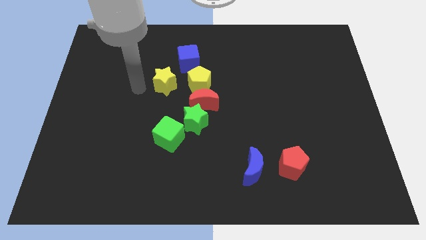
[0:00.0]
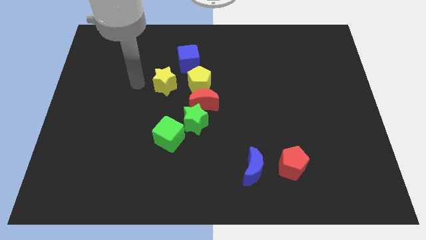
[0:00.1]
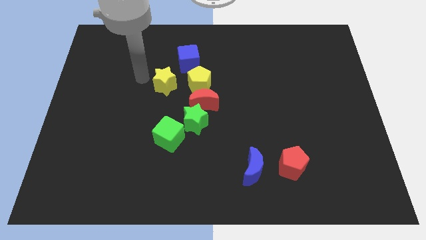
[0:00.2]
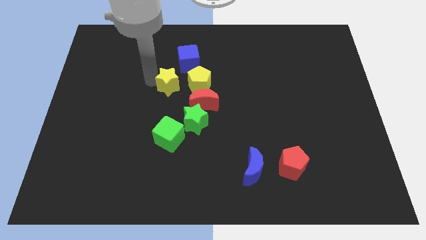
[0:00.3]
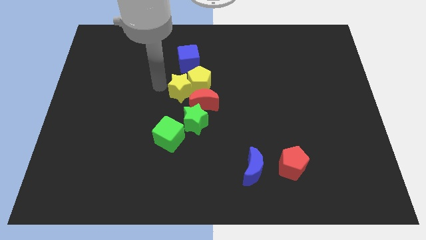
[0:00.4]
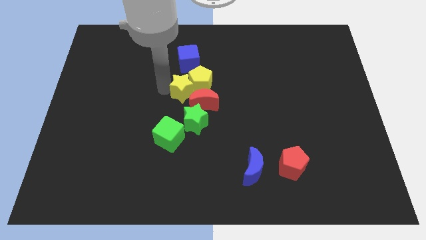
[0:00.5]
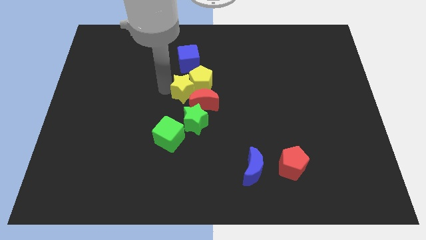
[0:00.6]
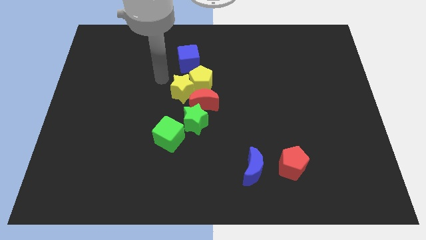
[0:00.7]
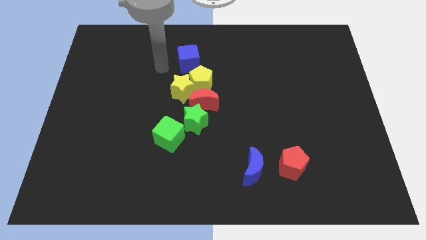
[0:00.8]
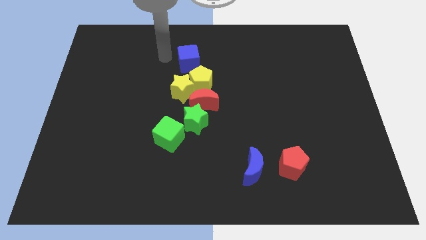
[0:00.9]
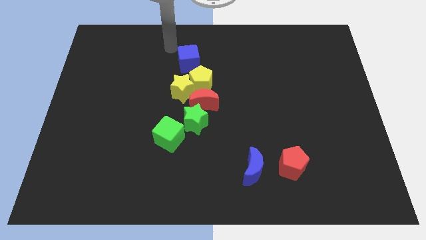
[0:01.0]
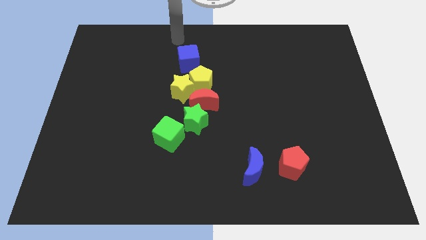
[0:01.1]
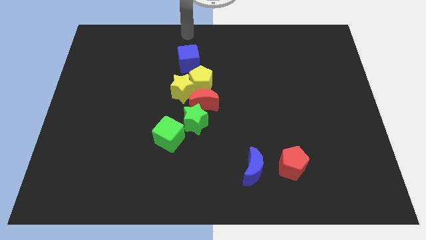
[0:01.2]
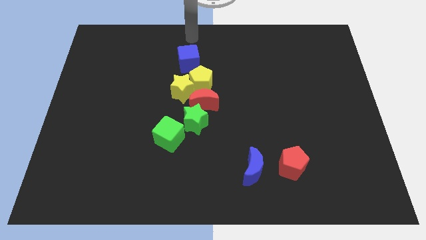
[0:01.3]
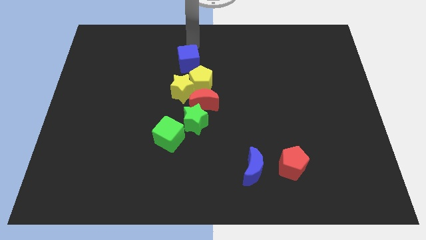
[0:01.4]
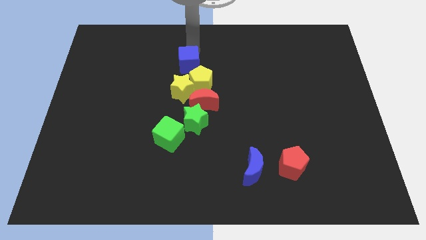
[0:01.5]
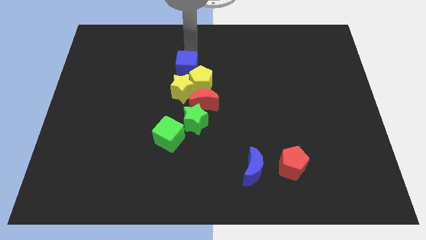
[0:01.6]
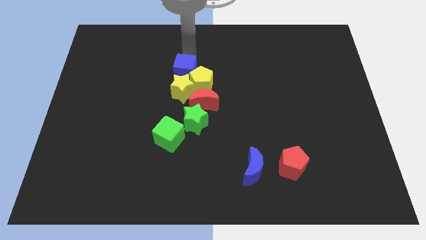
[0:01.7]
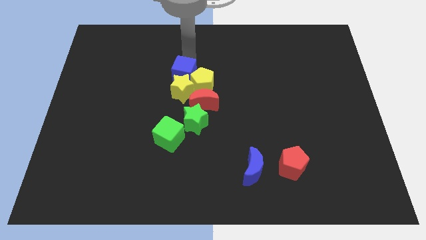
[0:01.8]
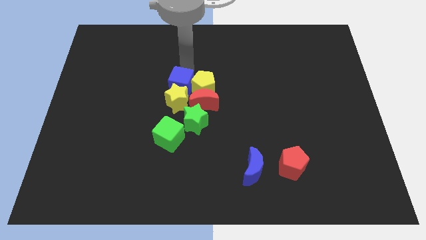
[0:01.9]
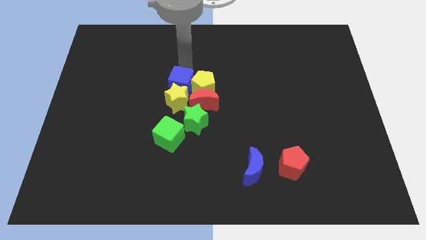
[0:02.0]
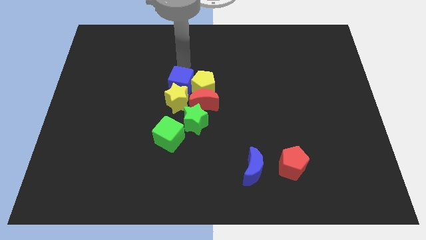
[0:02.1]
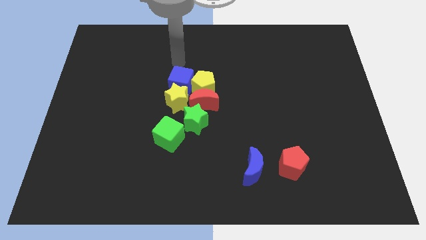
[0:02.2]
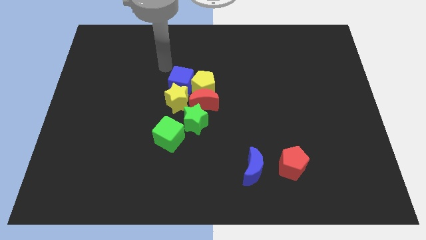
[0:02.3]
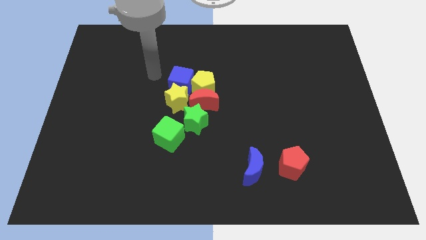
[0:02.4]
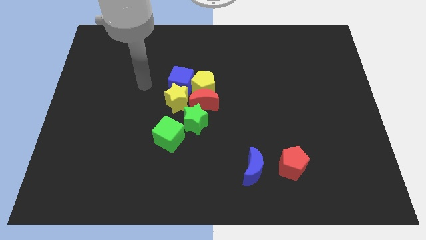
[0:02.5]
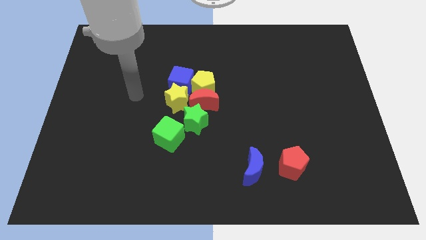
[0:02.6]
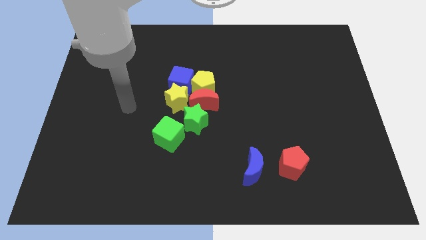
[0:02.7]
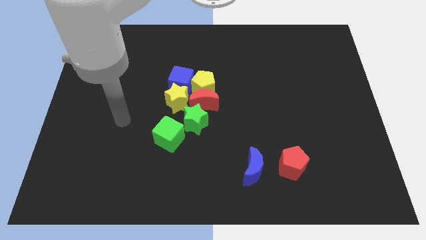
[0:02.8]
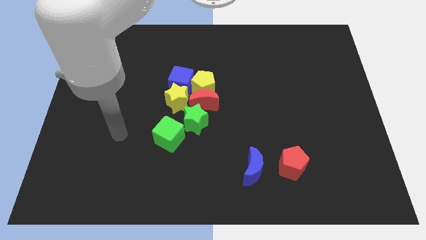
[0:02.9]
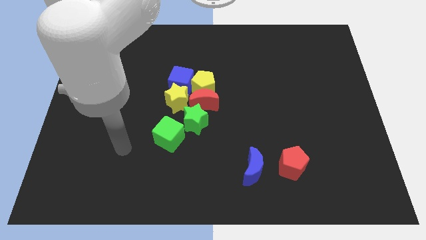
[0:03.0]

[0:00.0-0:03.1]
move the yellow star and blue cube into the yellow pentagon and go away

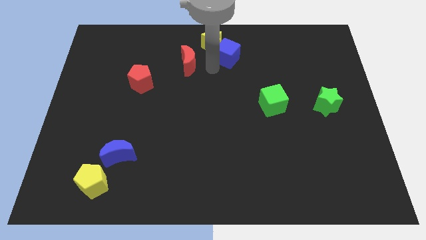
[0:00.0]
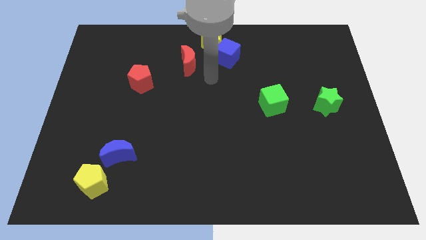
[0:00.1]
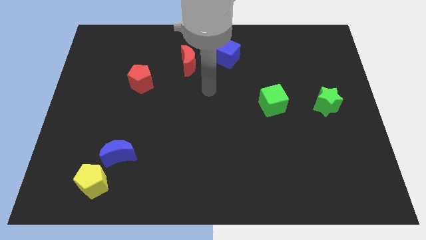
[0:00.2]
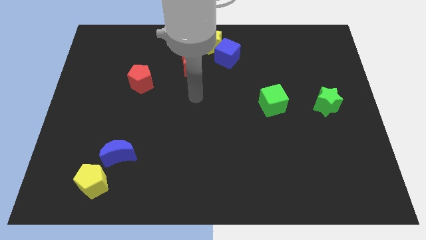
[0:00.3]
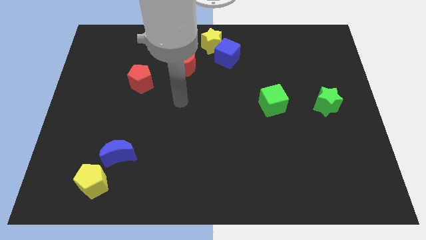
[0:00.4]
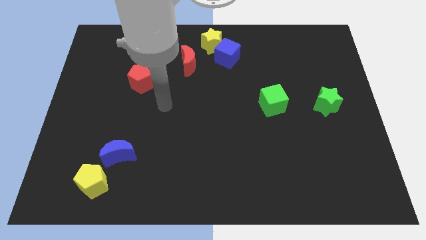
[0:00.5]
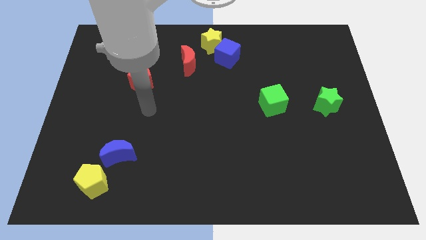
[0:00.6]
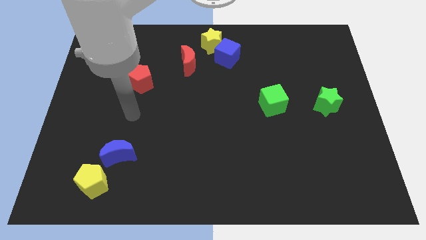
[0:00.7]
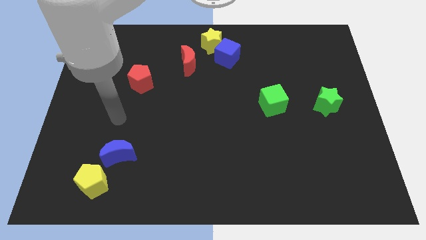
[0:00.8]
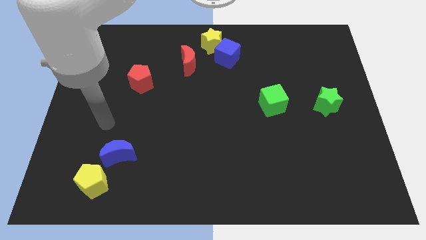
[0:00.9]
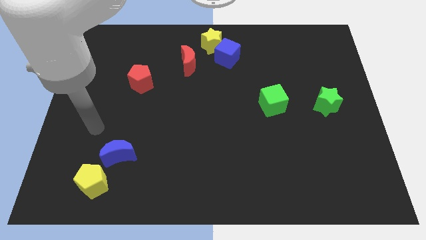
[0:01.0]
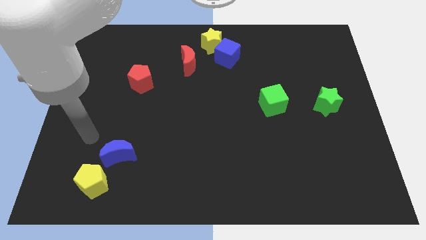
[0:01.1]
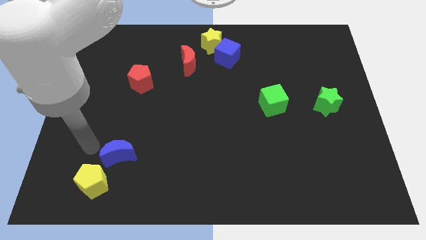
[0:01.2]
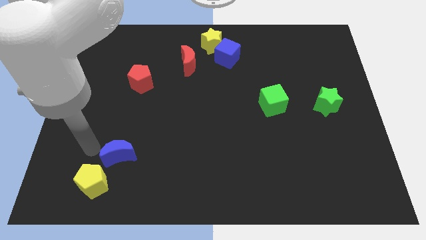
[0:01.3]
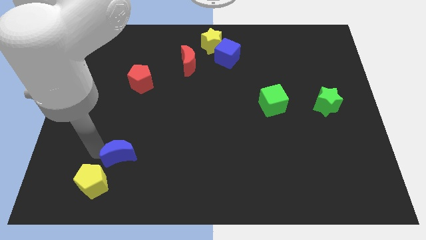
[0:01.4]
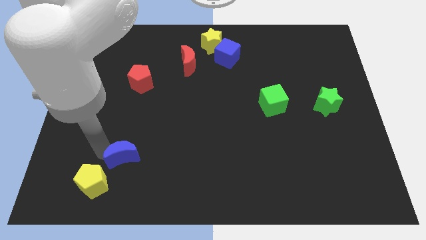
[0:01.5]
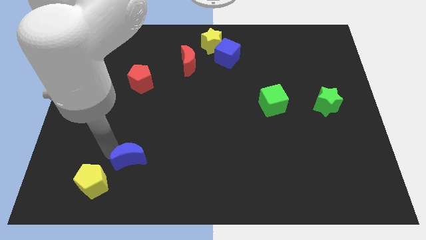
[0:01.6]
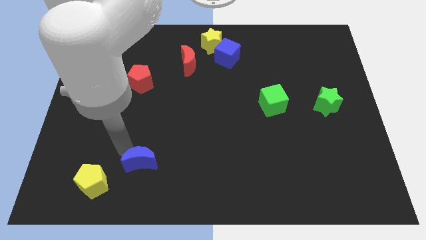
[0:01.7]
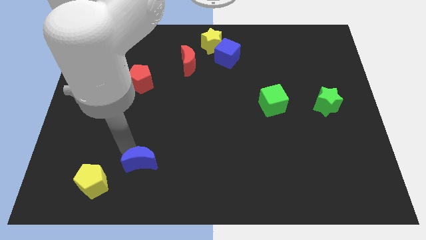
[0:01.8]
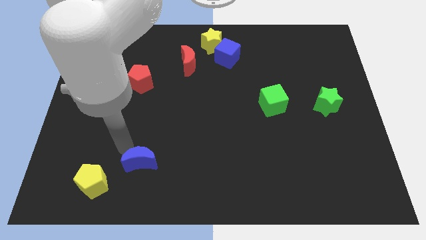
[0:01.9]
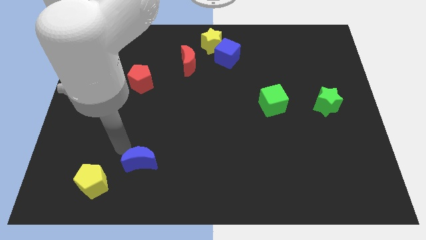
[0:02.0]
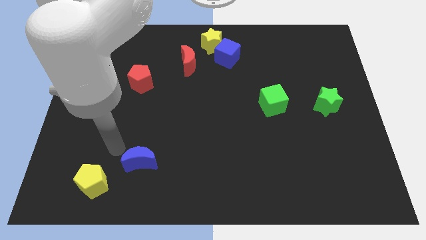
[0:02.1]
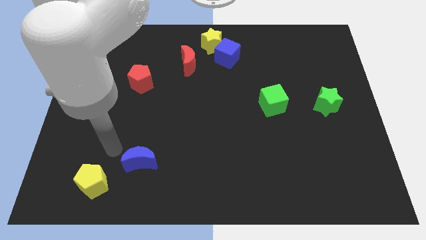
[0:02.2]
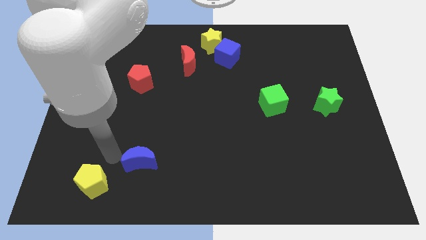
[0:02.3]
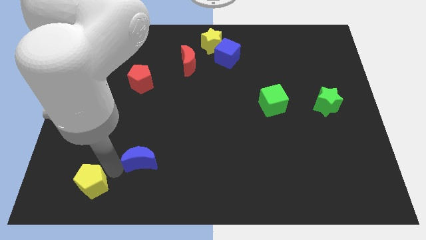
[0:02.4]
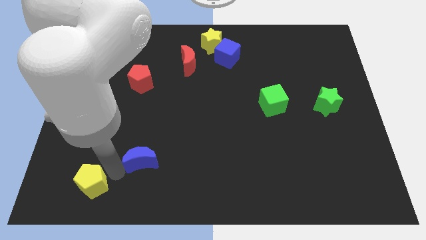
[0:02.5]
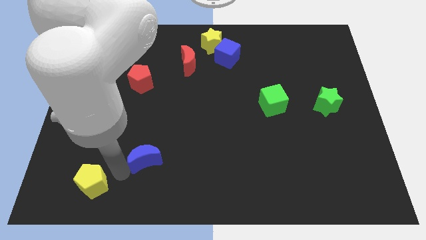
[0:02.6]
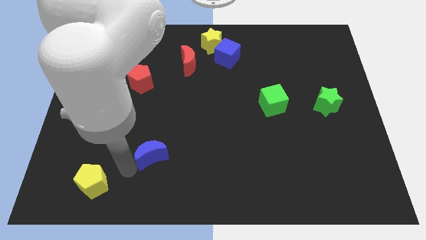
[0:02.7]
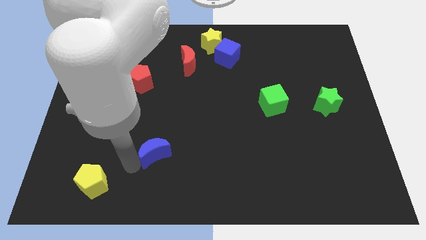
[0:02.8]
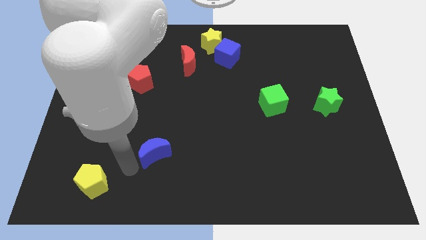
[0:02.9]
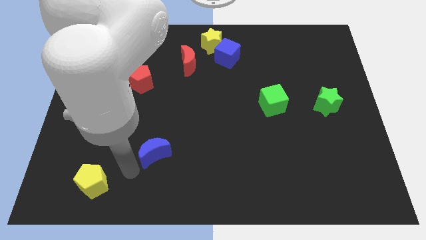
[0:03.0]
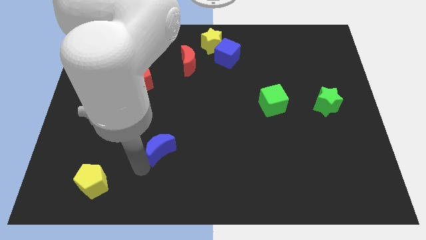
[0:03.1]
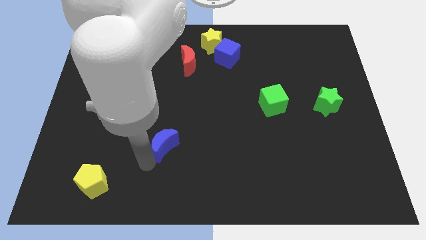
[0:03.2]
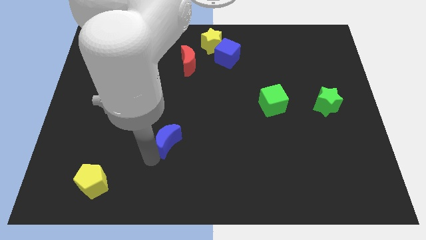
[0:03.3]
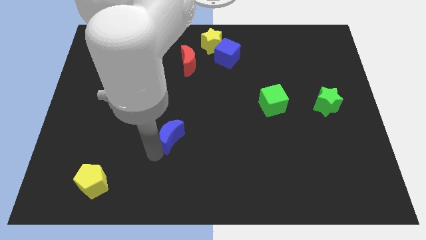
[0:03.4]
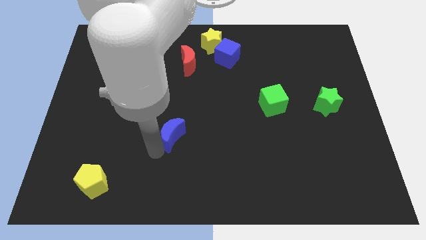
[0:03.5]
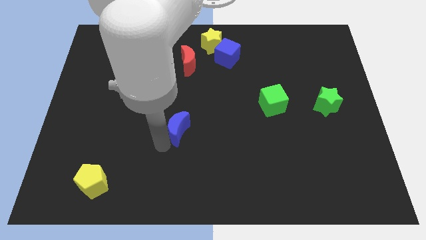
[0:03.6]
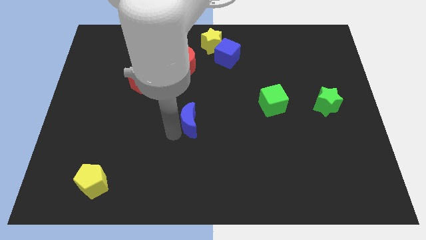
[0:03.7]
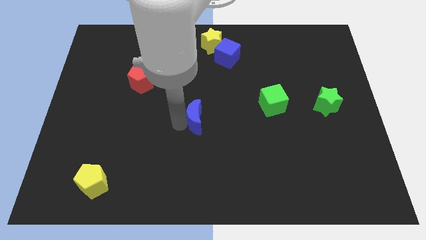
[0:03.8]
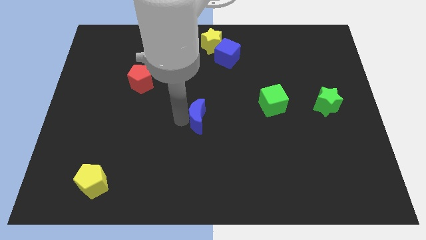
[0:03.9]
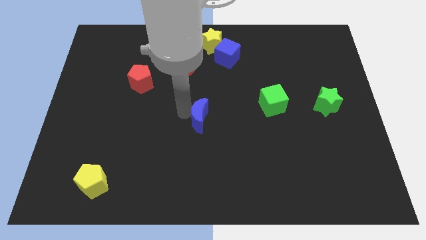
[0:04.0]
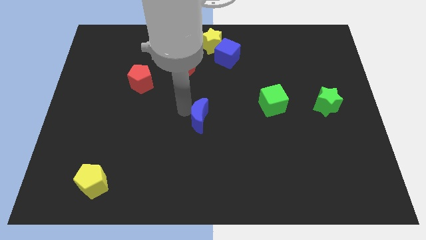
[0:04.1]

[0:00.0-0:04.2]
move the blue crescent to the center of the table

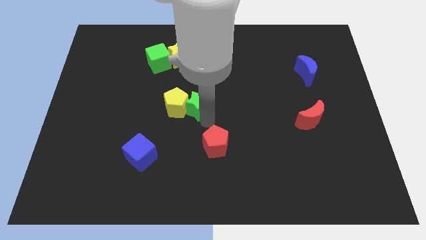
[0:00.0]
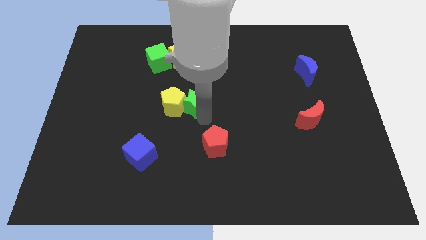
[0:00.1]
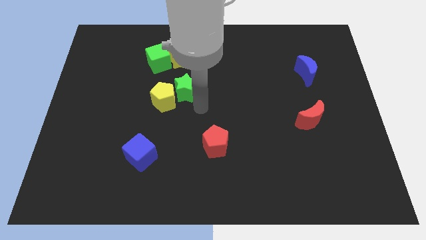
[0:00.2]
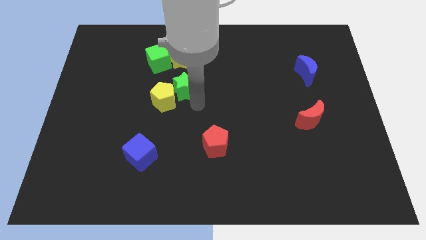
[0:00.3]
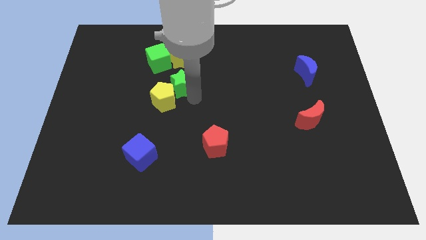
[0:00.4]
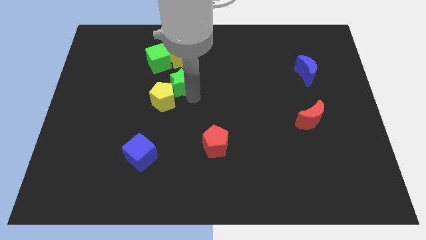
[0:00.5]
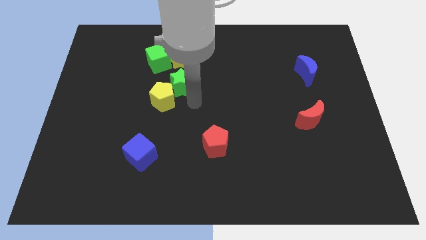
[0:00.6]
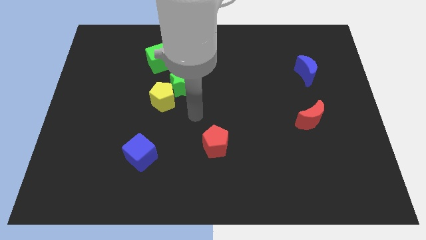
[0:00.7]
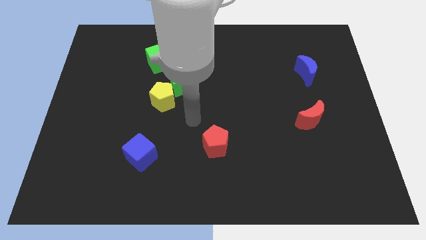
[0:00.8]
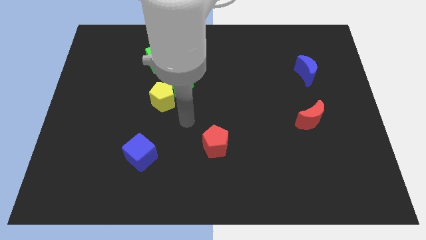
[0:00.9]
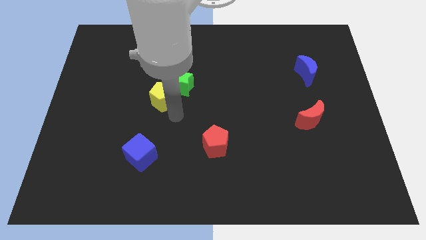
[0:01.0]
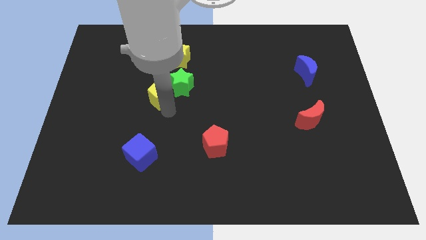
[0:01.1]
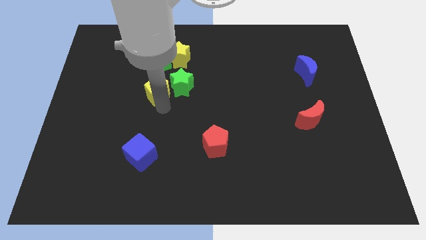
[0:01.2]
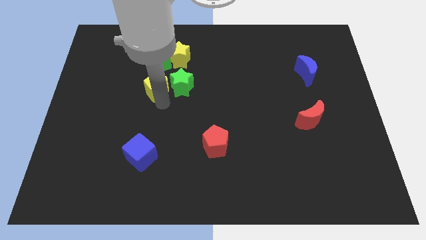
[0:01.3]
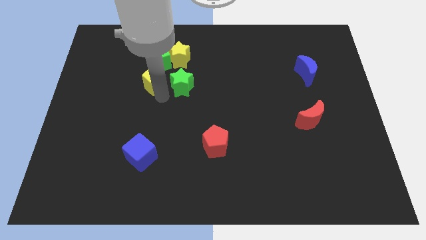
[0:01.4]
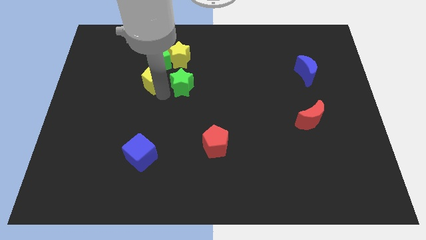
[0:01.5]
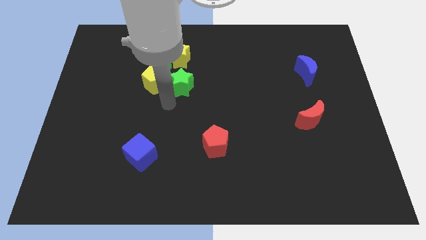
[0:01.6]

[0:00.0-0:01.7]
push the green star along with the yellow pentagon vertically to the bottom of the yellow star
